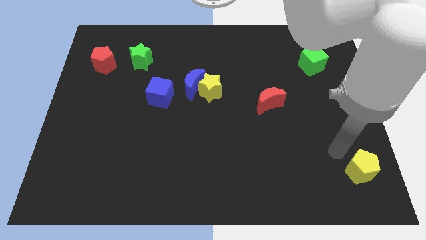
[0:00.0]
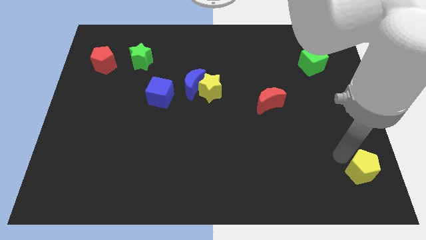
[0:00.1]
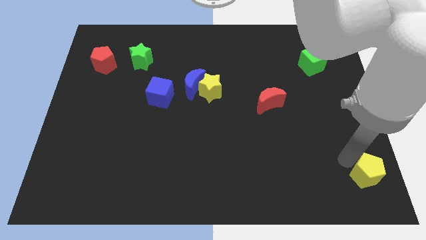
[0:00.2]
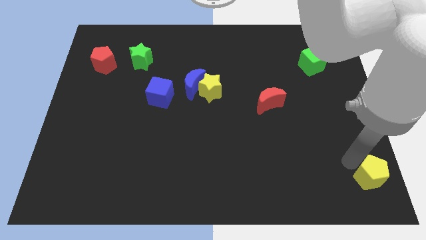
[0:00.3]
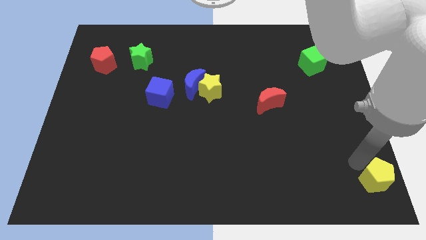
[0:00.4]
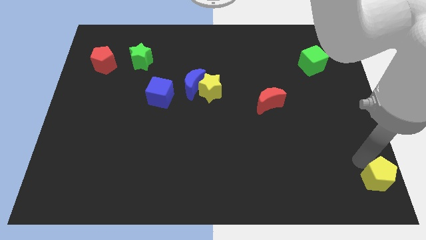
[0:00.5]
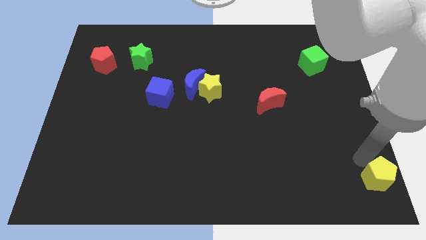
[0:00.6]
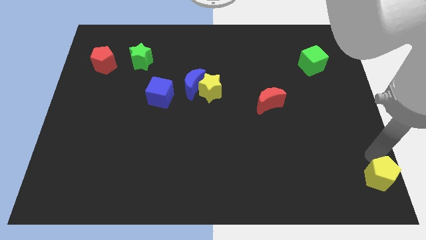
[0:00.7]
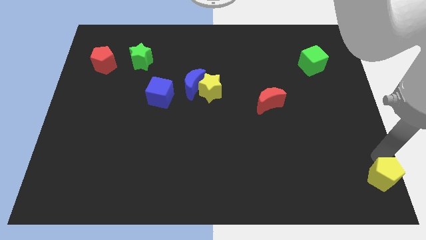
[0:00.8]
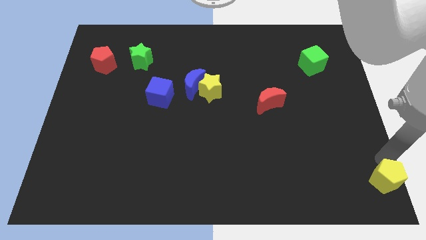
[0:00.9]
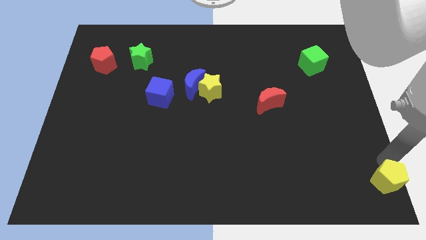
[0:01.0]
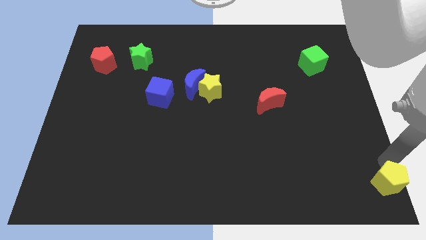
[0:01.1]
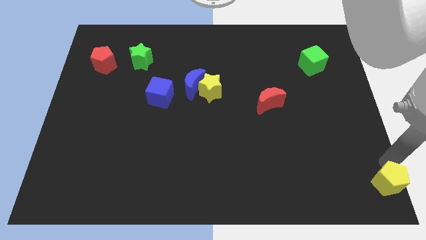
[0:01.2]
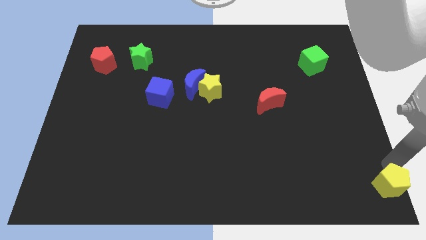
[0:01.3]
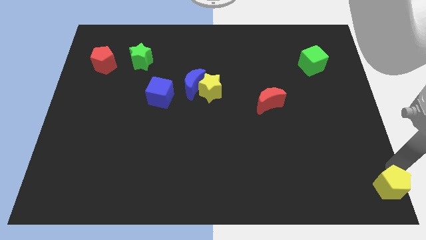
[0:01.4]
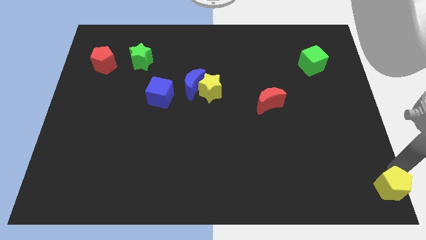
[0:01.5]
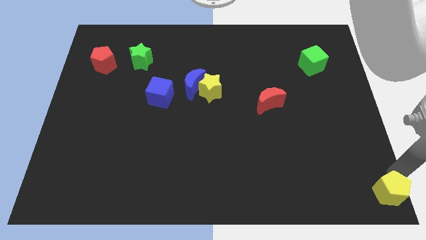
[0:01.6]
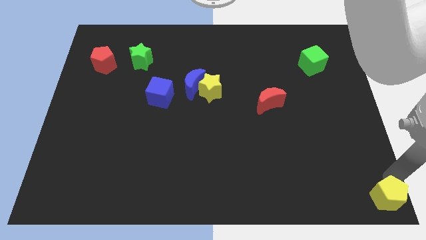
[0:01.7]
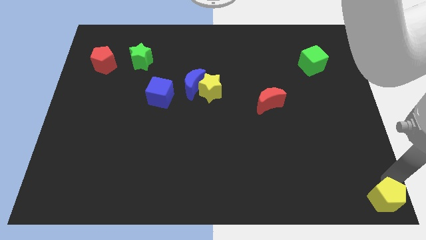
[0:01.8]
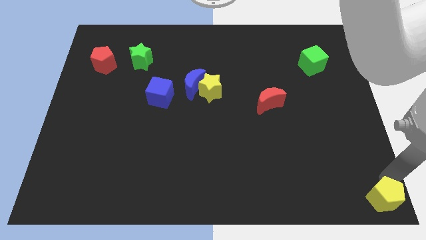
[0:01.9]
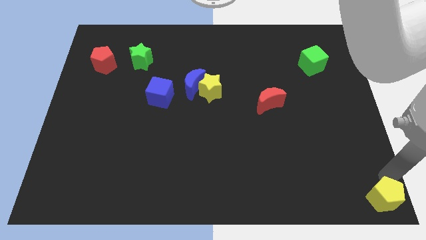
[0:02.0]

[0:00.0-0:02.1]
place the yellow star to the bottom right

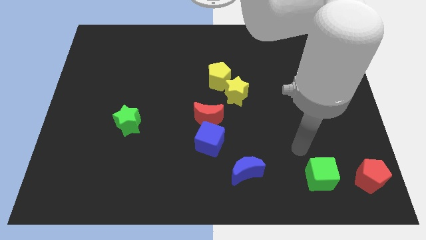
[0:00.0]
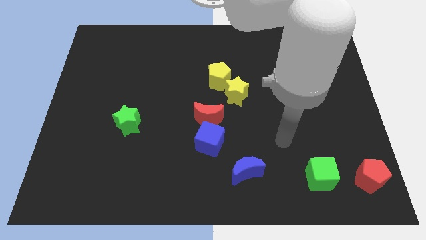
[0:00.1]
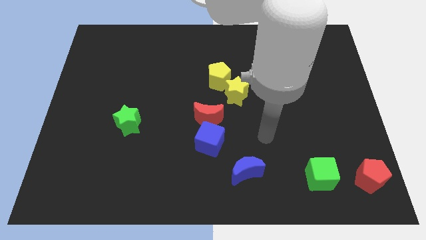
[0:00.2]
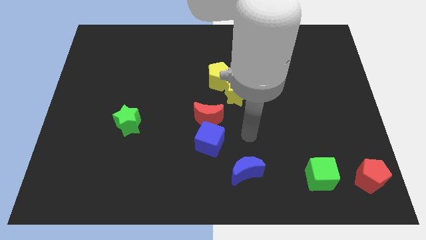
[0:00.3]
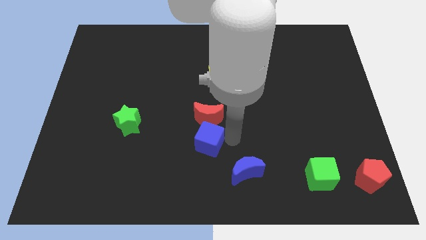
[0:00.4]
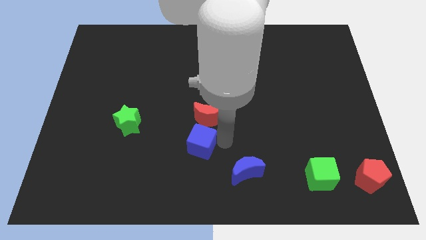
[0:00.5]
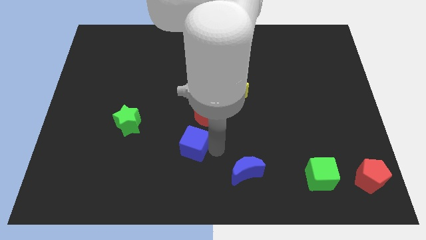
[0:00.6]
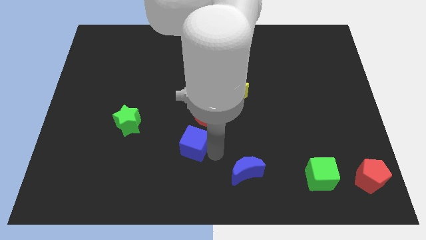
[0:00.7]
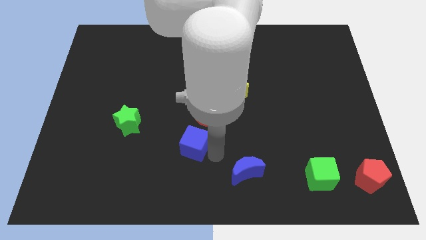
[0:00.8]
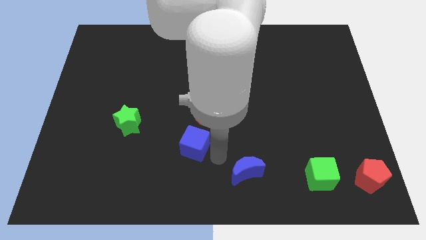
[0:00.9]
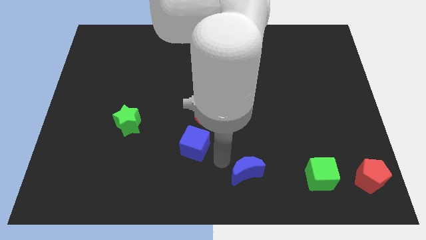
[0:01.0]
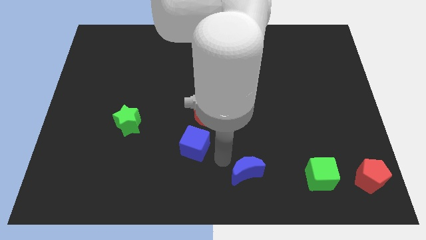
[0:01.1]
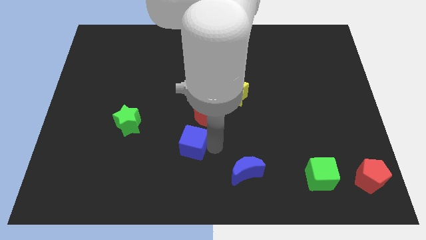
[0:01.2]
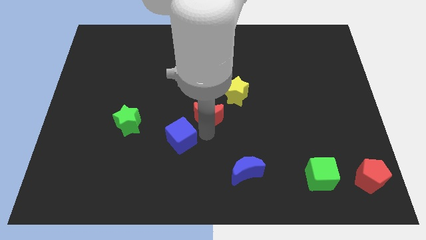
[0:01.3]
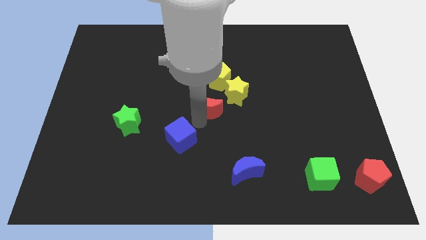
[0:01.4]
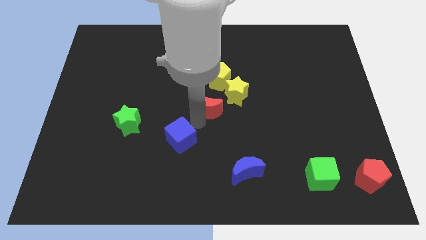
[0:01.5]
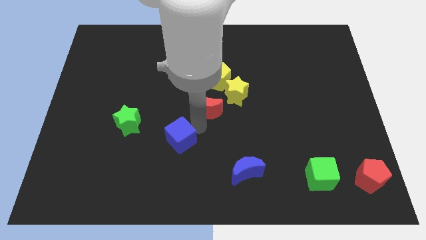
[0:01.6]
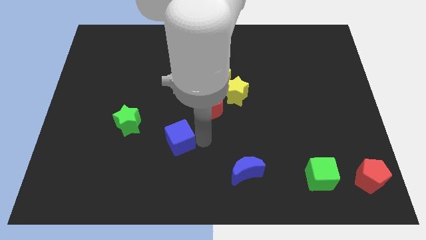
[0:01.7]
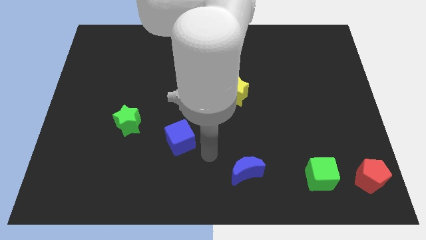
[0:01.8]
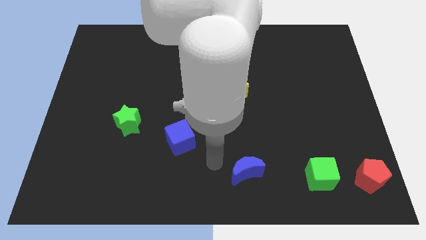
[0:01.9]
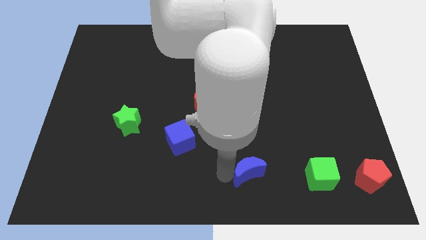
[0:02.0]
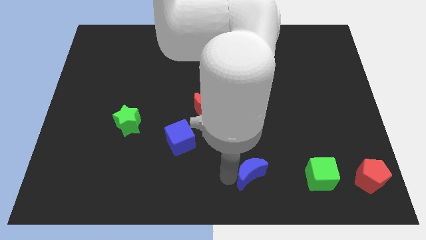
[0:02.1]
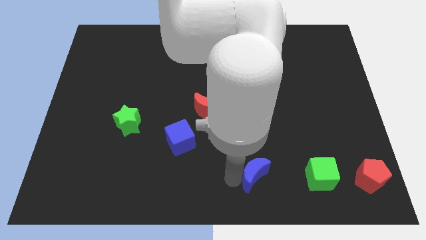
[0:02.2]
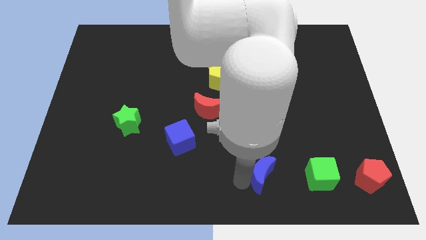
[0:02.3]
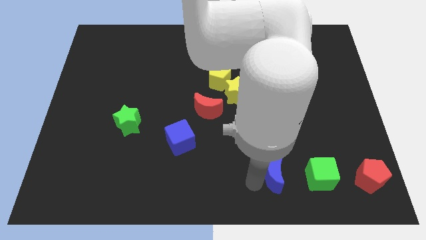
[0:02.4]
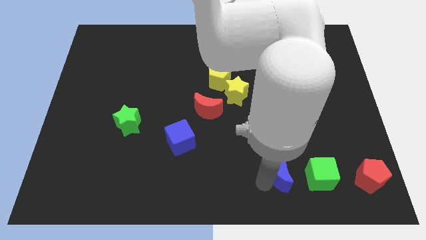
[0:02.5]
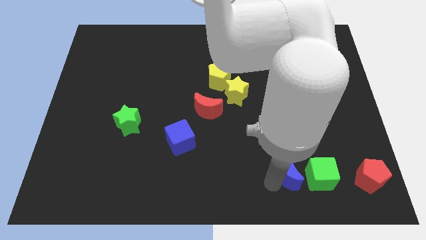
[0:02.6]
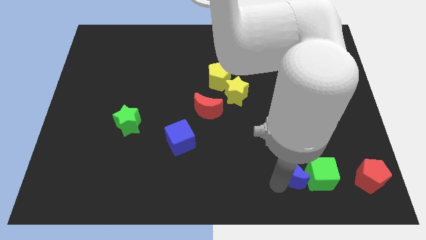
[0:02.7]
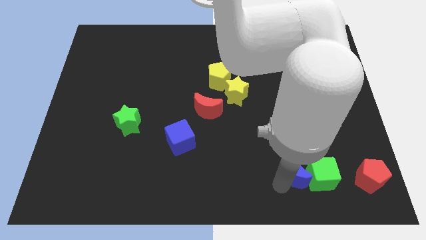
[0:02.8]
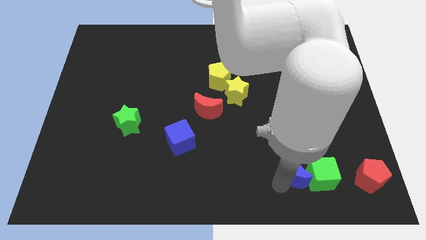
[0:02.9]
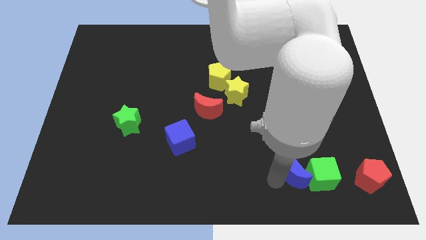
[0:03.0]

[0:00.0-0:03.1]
separate blue blocks from each other

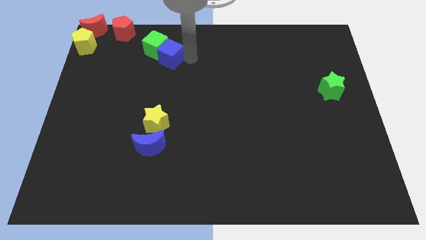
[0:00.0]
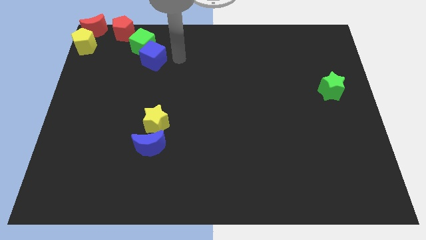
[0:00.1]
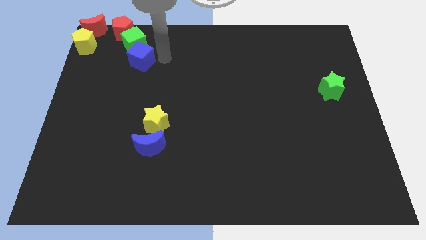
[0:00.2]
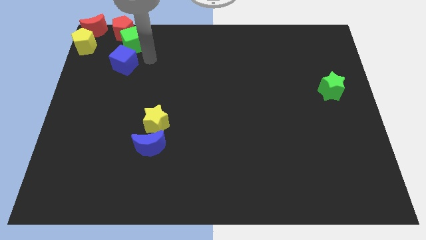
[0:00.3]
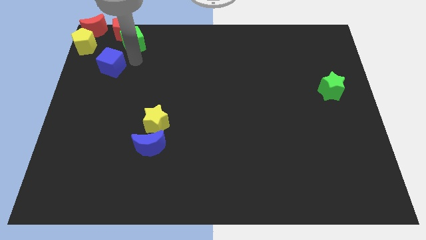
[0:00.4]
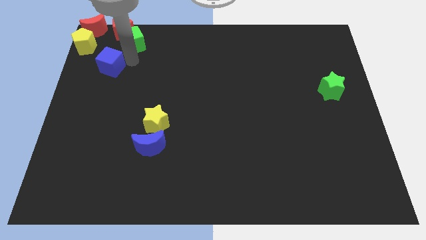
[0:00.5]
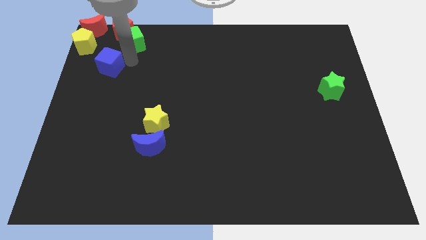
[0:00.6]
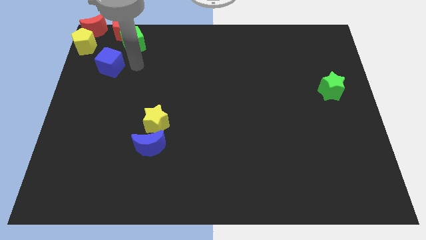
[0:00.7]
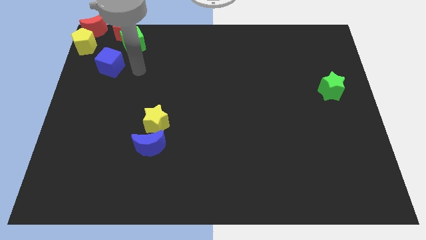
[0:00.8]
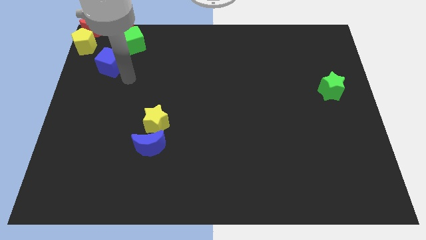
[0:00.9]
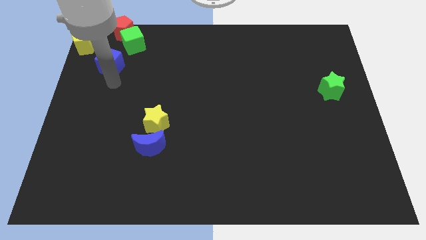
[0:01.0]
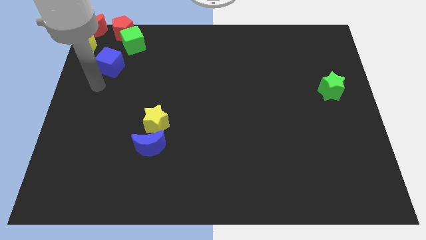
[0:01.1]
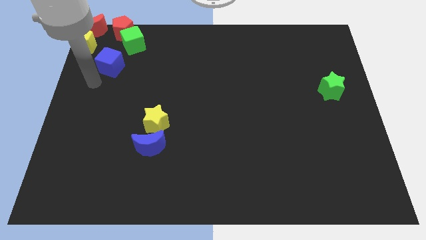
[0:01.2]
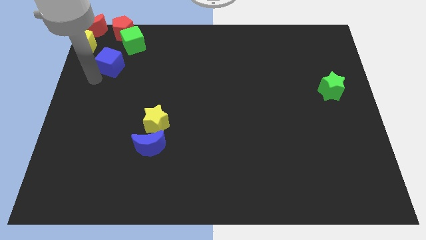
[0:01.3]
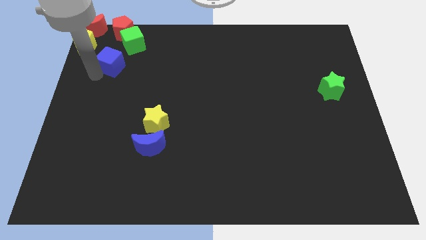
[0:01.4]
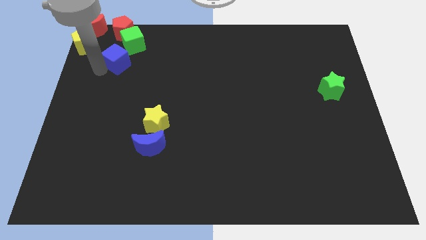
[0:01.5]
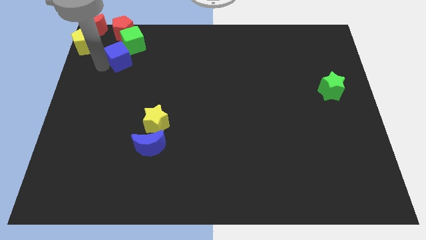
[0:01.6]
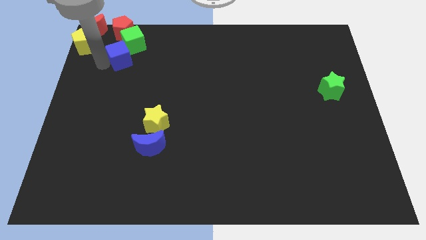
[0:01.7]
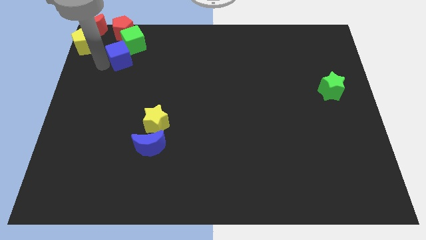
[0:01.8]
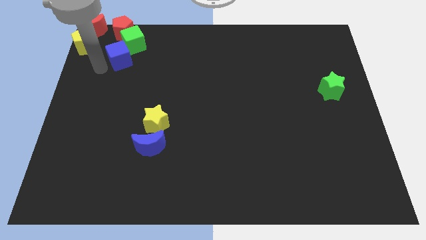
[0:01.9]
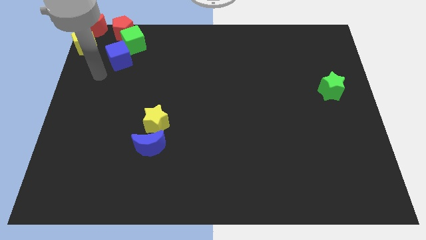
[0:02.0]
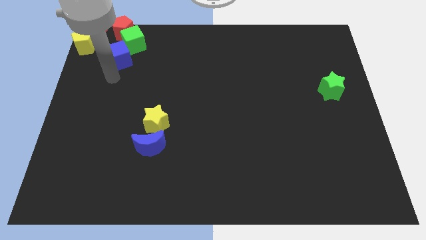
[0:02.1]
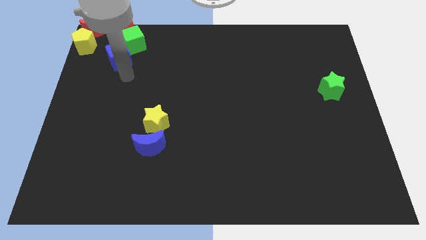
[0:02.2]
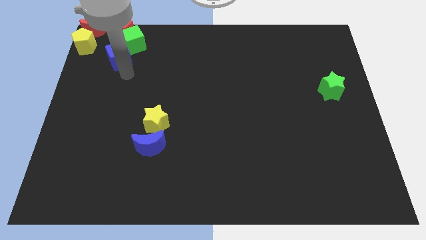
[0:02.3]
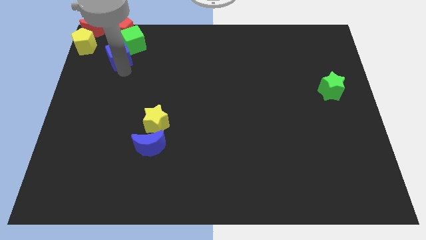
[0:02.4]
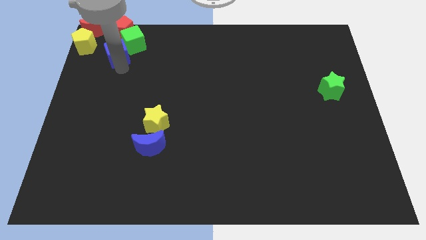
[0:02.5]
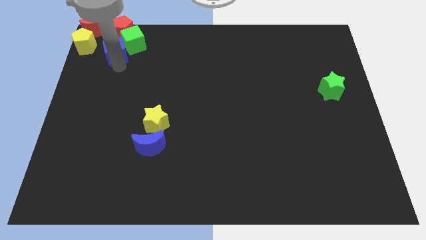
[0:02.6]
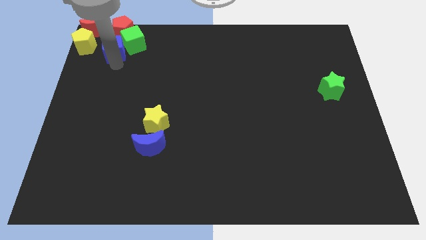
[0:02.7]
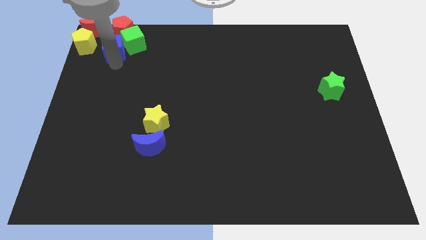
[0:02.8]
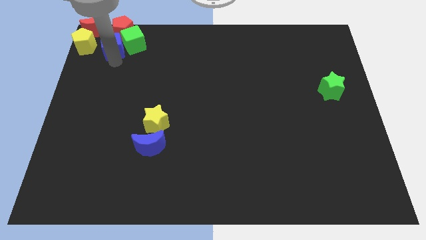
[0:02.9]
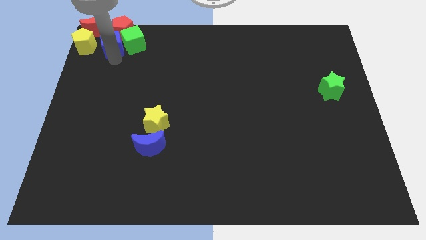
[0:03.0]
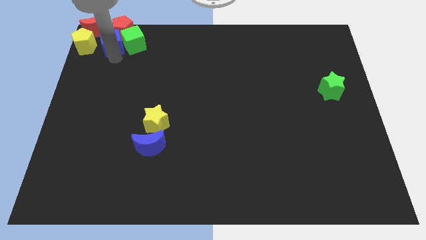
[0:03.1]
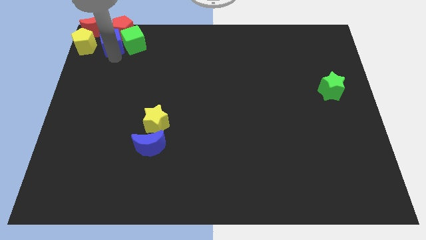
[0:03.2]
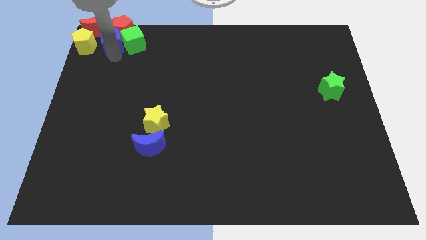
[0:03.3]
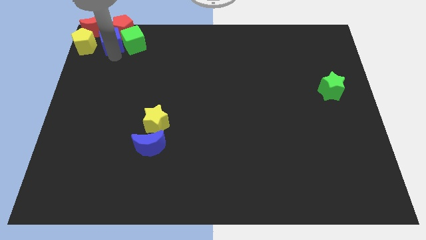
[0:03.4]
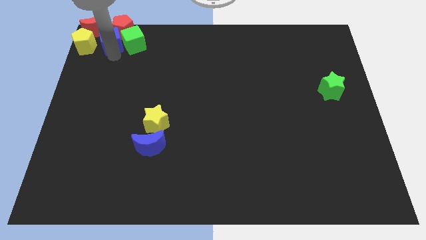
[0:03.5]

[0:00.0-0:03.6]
push the blue square in between of yellow pentagon and green cube

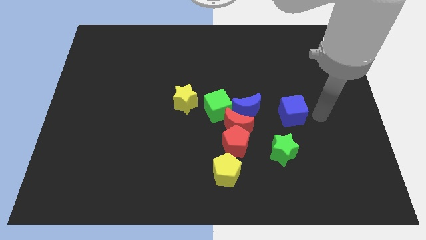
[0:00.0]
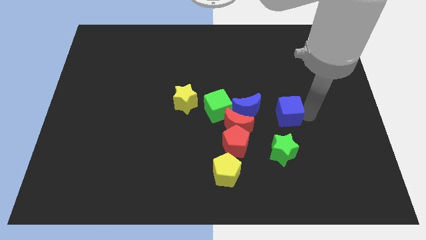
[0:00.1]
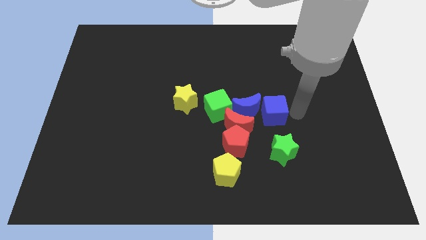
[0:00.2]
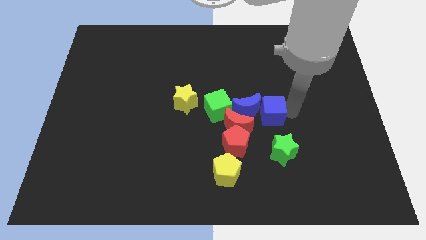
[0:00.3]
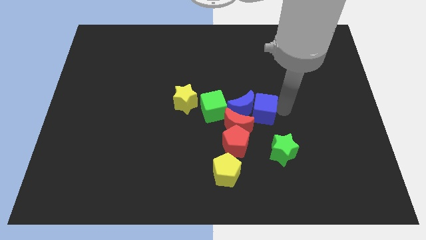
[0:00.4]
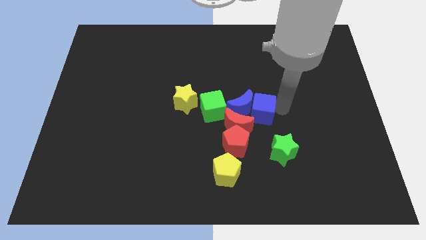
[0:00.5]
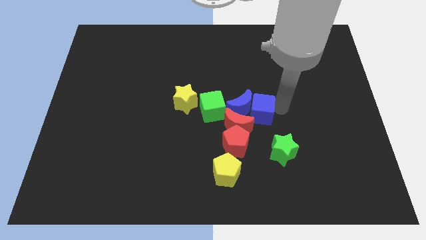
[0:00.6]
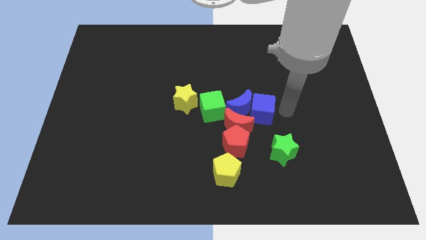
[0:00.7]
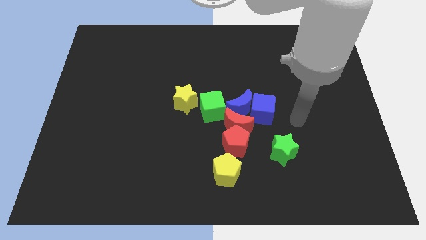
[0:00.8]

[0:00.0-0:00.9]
push the blue cube into the blue moon
